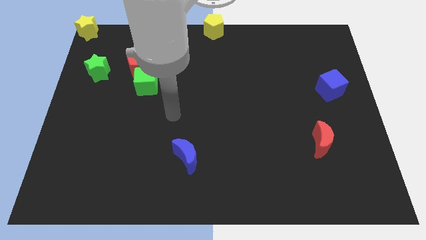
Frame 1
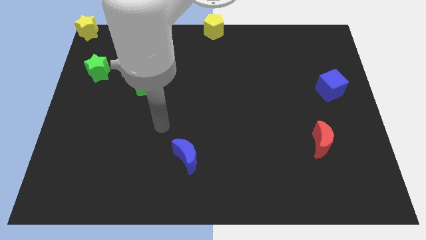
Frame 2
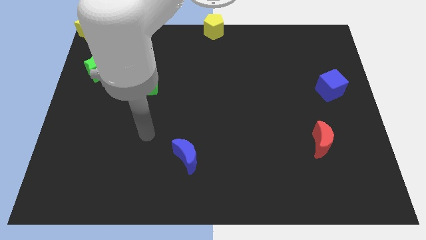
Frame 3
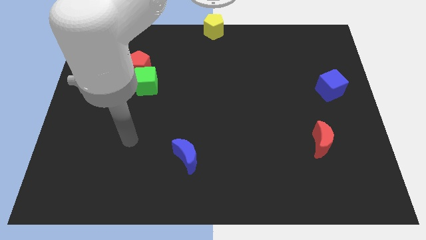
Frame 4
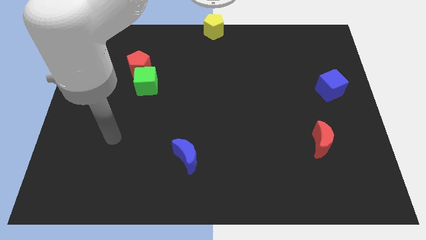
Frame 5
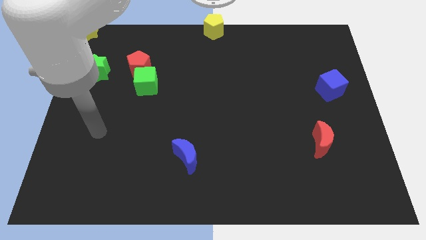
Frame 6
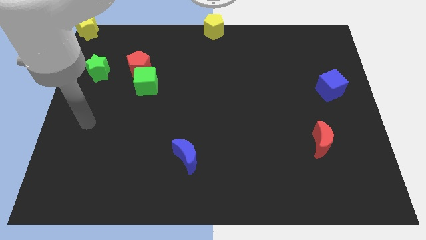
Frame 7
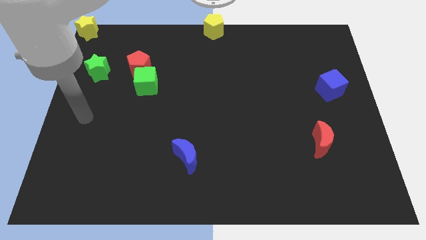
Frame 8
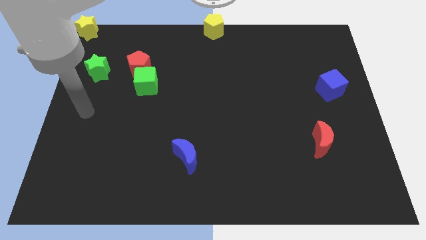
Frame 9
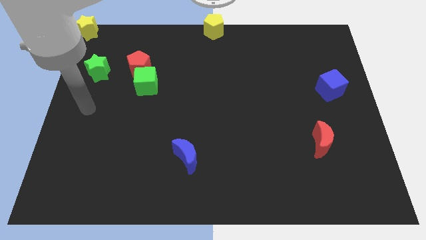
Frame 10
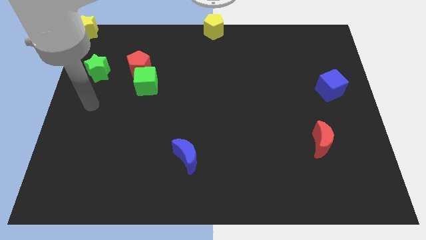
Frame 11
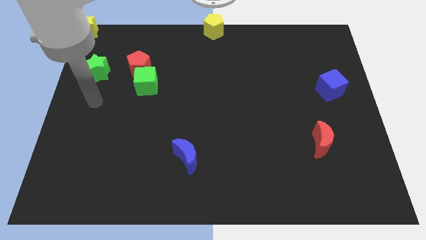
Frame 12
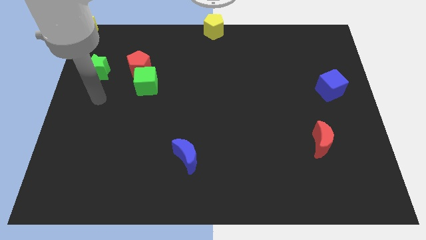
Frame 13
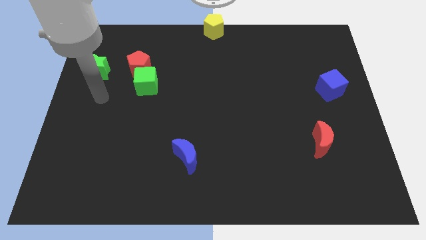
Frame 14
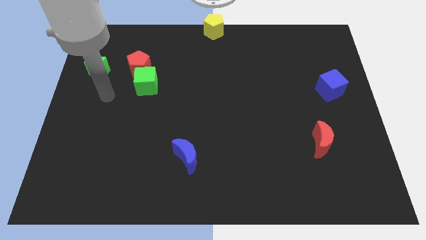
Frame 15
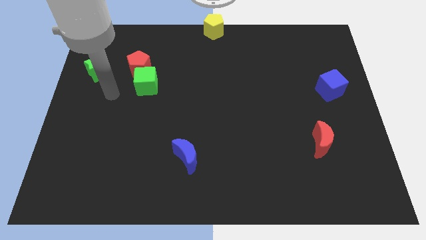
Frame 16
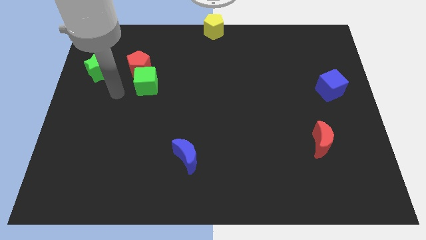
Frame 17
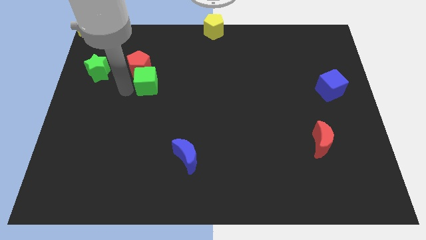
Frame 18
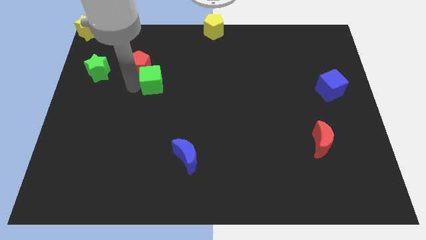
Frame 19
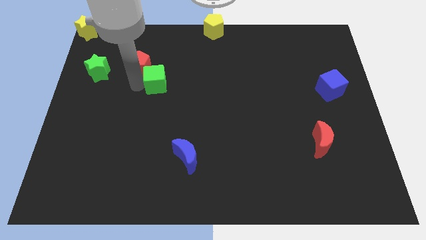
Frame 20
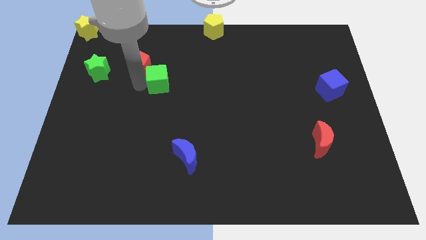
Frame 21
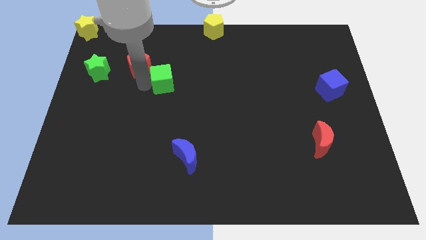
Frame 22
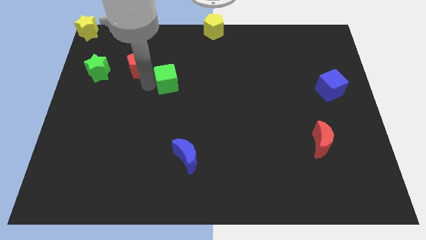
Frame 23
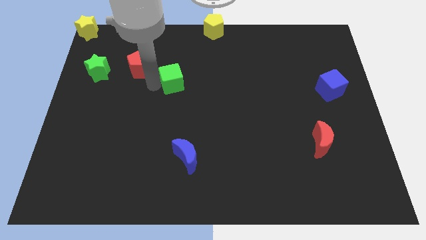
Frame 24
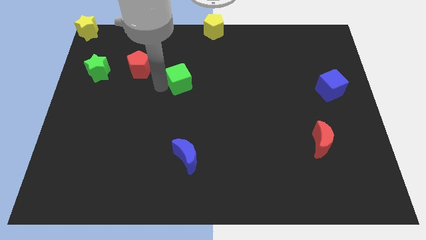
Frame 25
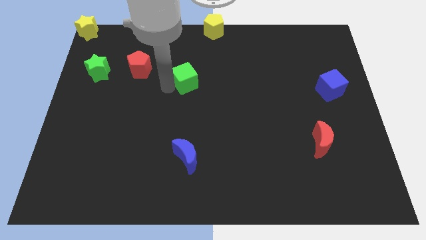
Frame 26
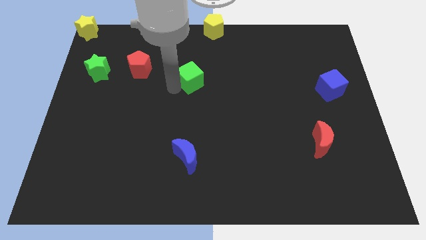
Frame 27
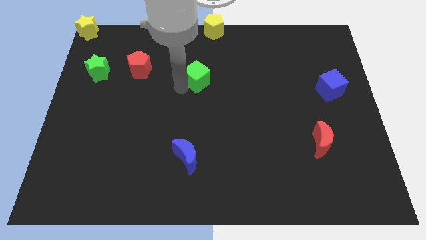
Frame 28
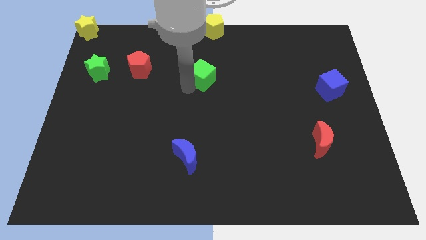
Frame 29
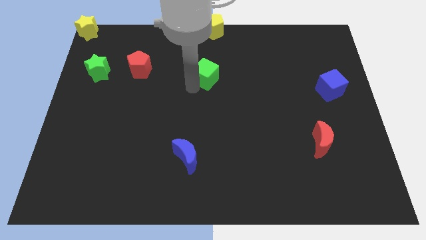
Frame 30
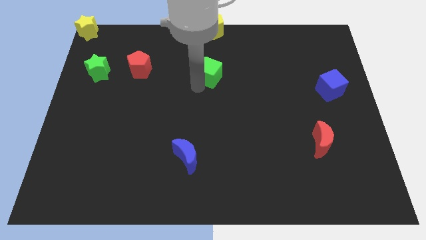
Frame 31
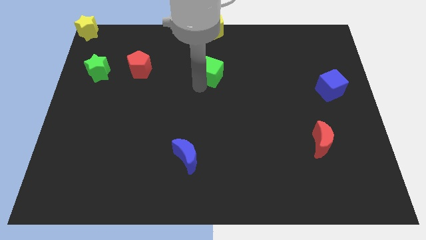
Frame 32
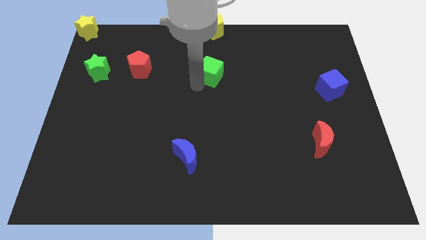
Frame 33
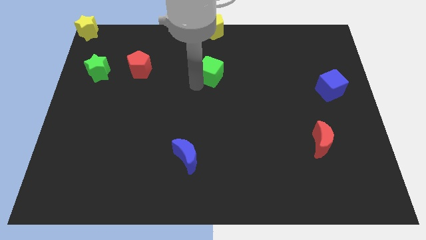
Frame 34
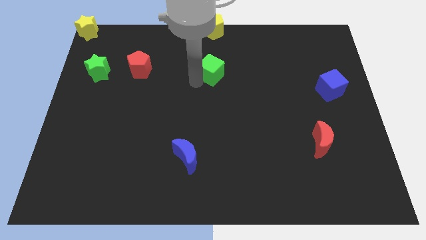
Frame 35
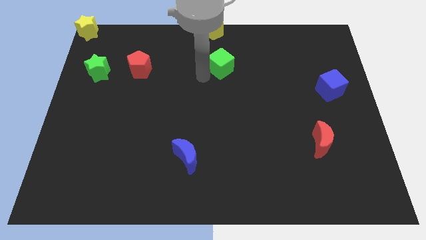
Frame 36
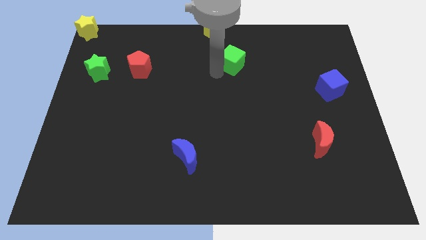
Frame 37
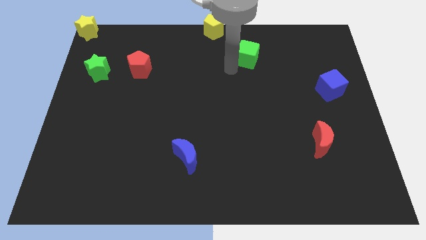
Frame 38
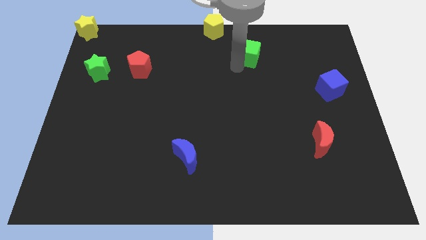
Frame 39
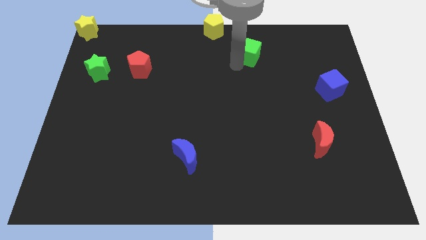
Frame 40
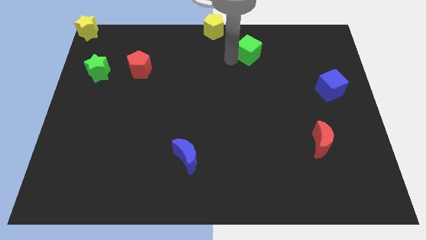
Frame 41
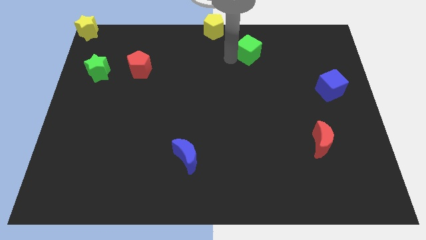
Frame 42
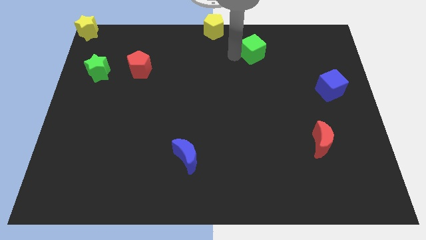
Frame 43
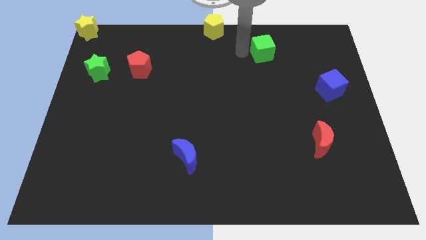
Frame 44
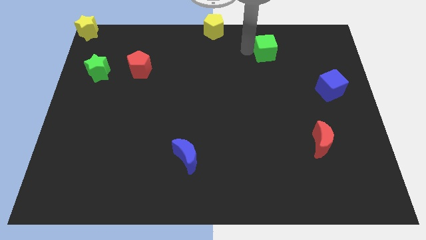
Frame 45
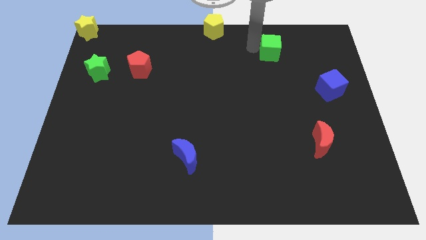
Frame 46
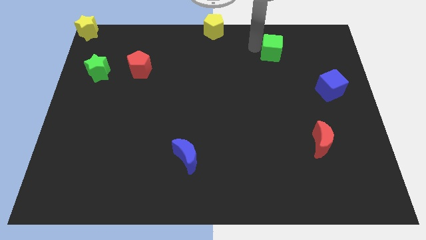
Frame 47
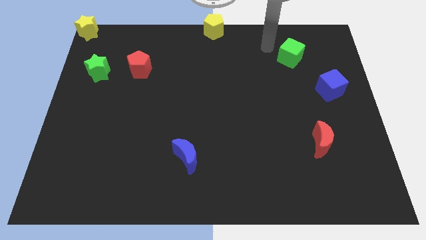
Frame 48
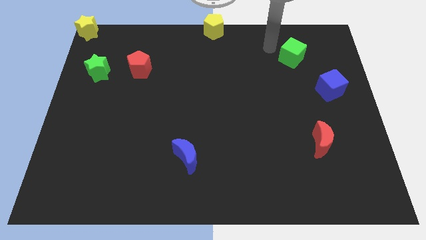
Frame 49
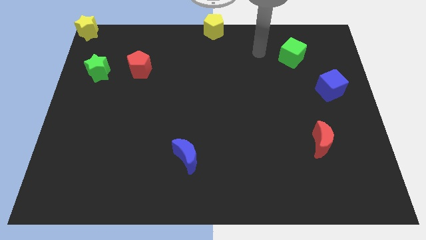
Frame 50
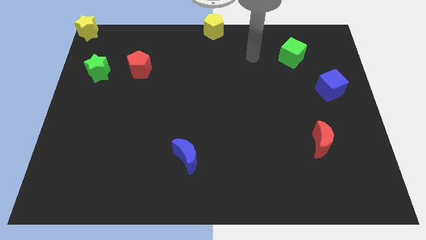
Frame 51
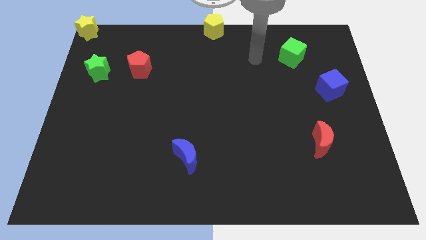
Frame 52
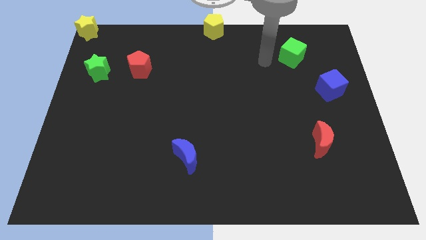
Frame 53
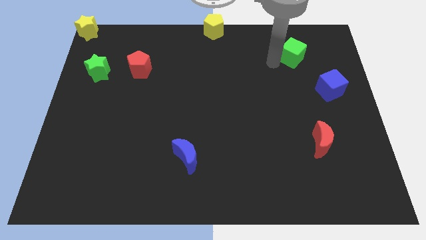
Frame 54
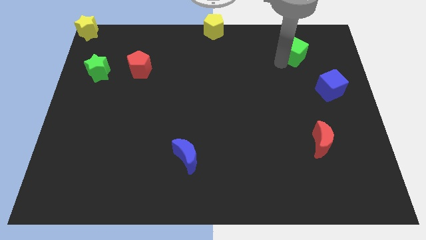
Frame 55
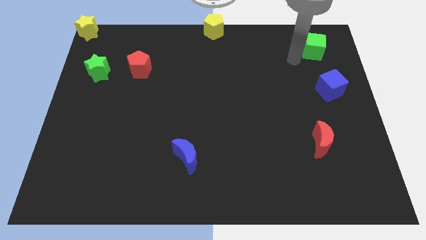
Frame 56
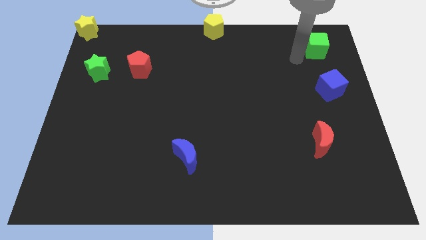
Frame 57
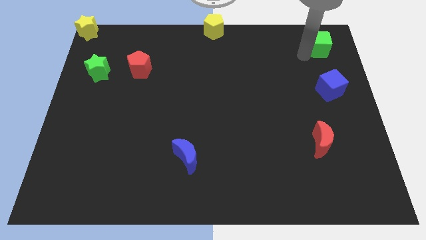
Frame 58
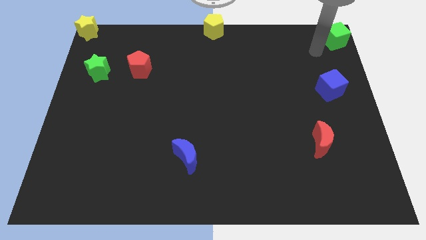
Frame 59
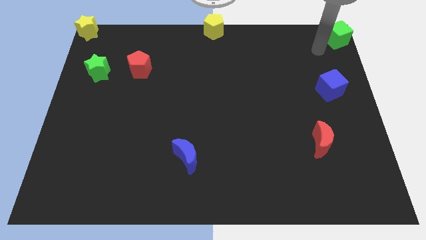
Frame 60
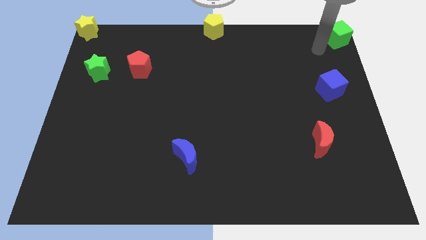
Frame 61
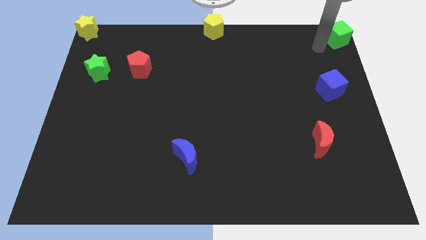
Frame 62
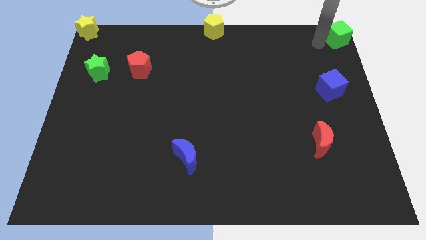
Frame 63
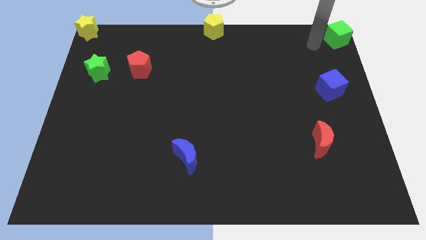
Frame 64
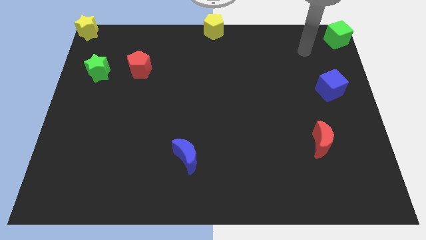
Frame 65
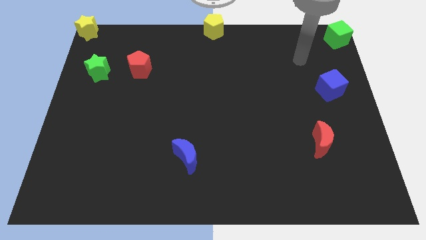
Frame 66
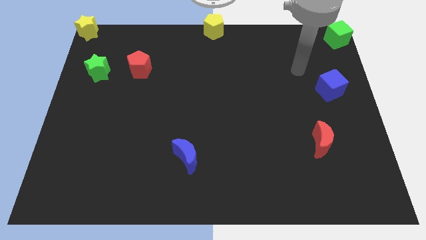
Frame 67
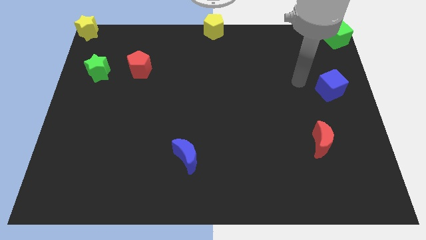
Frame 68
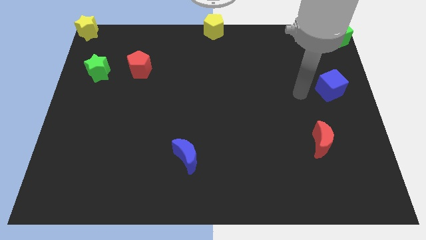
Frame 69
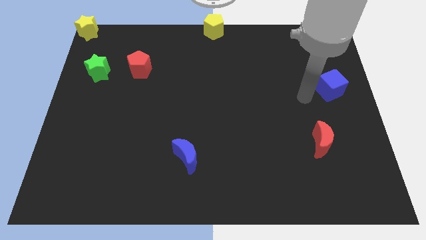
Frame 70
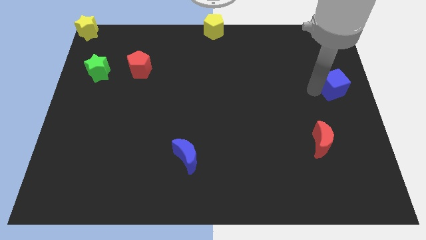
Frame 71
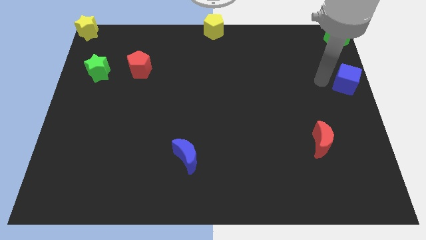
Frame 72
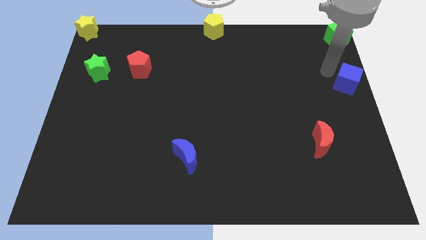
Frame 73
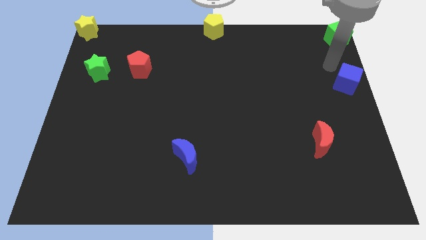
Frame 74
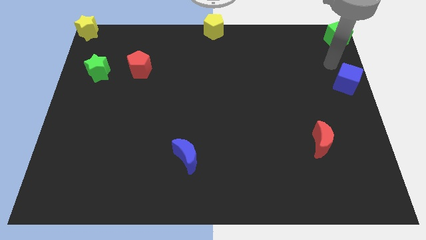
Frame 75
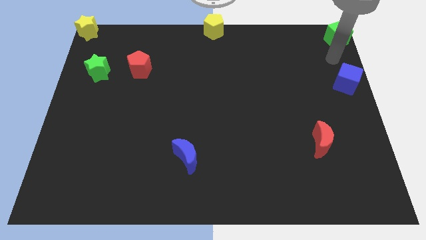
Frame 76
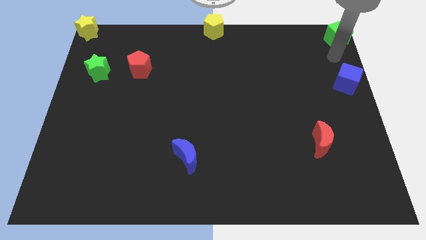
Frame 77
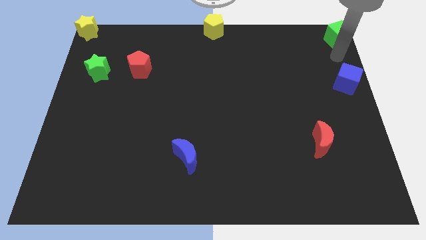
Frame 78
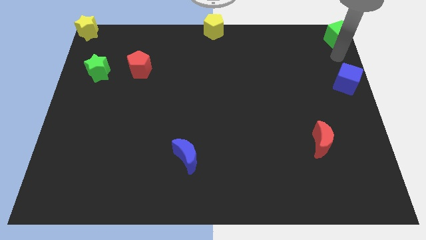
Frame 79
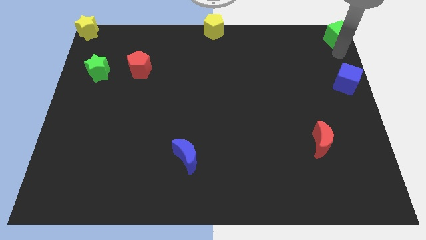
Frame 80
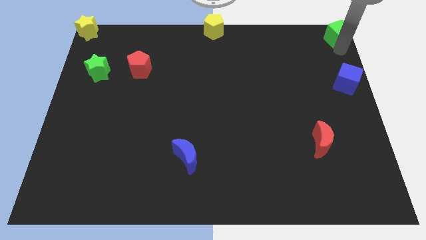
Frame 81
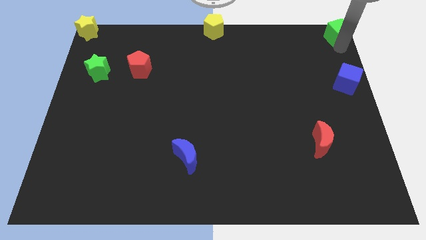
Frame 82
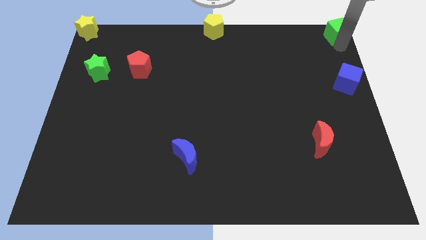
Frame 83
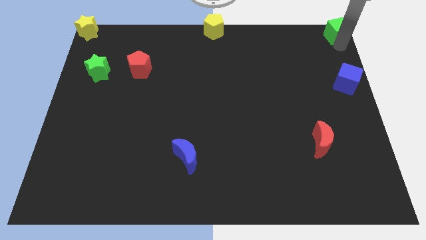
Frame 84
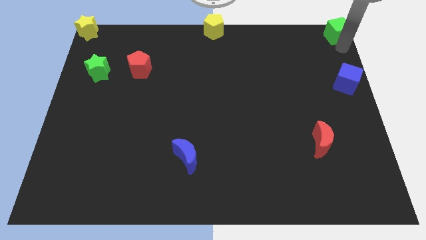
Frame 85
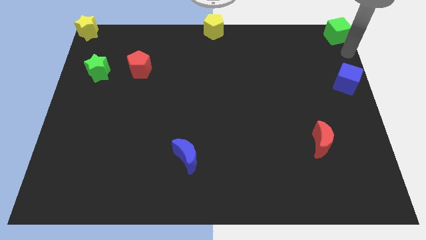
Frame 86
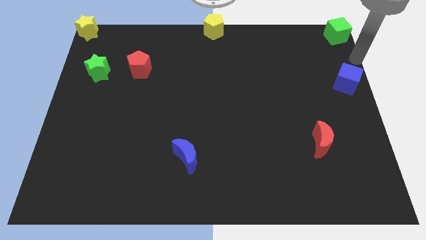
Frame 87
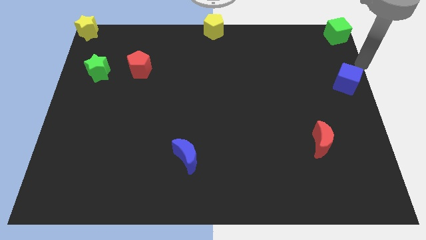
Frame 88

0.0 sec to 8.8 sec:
push the green cube towards the top right corner of the board

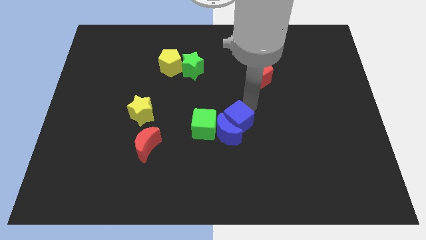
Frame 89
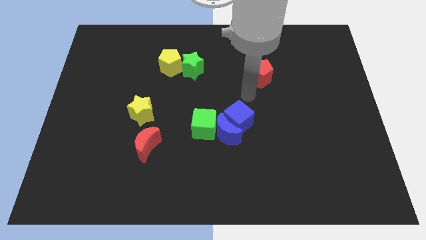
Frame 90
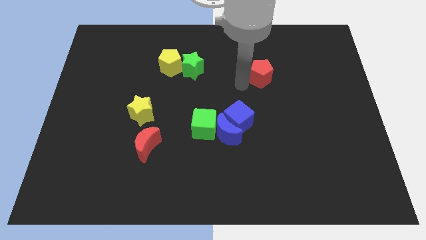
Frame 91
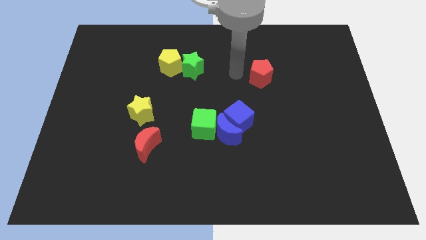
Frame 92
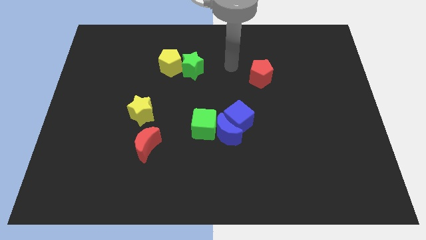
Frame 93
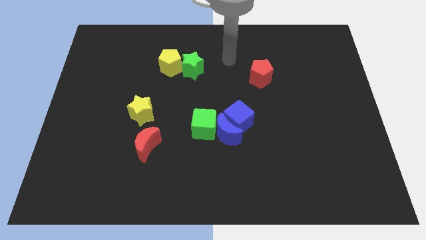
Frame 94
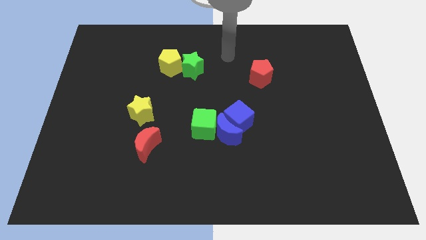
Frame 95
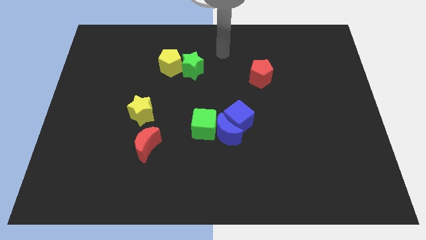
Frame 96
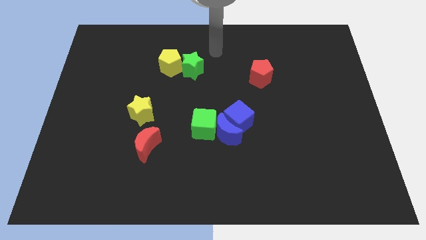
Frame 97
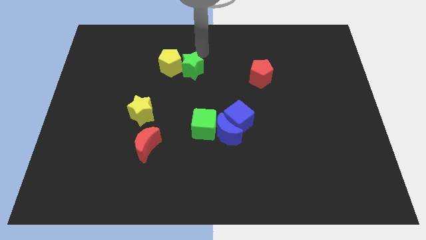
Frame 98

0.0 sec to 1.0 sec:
move your hand away from the blue cube
